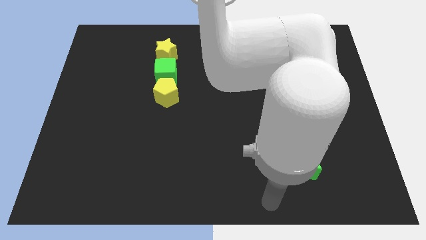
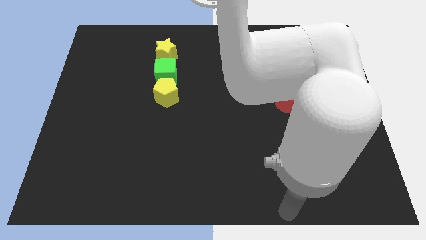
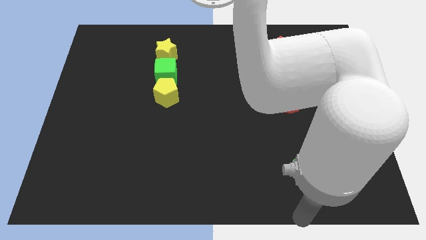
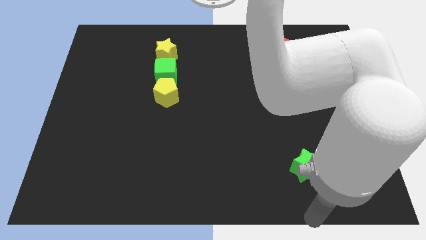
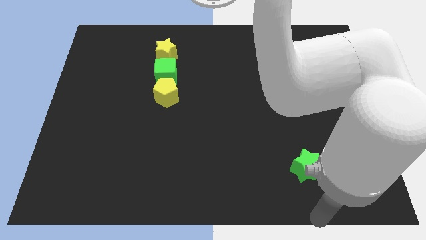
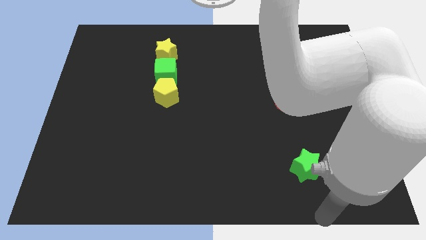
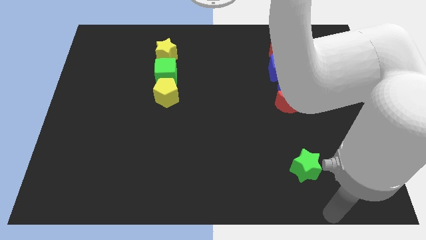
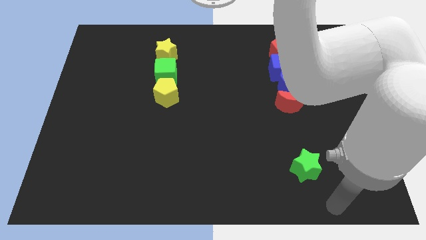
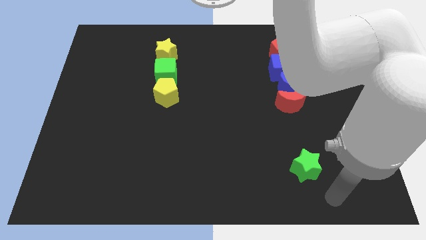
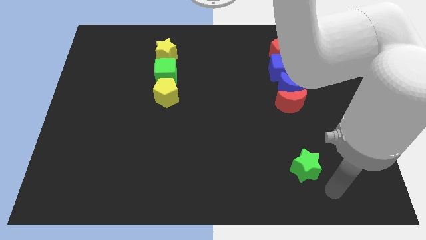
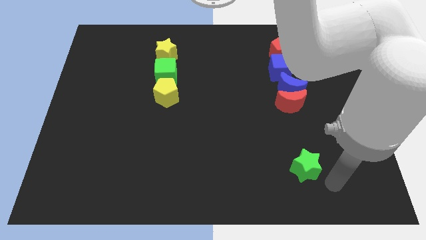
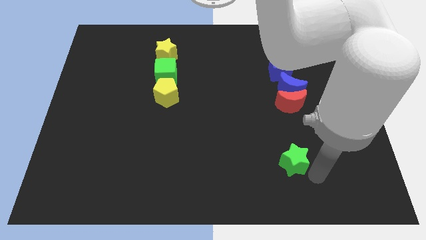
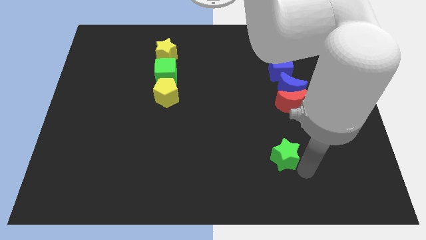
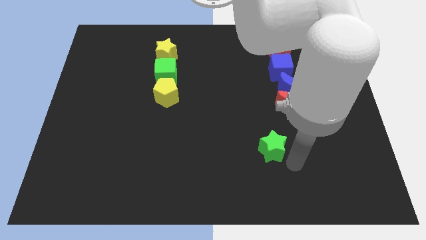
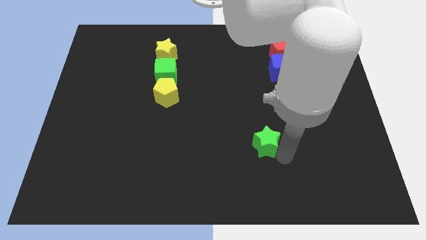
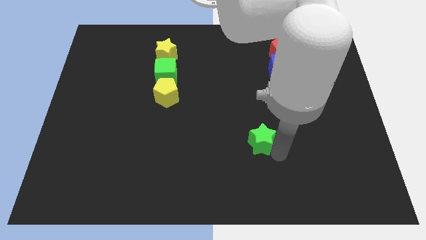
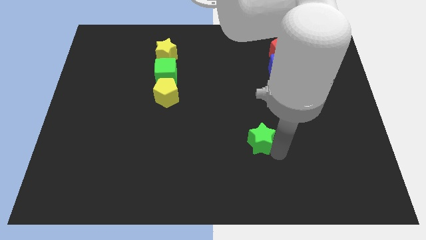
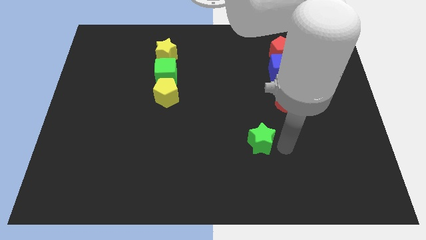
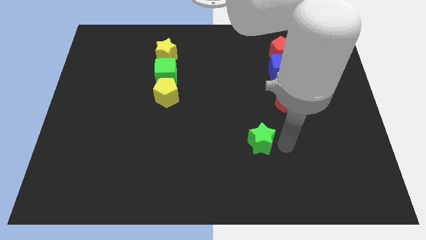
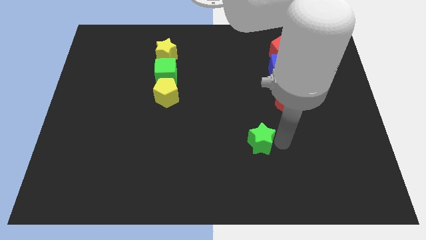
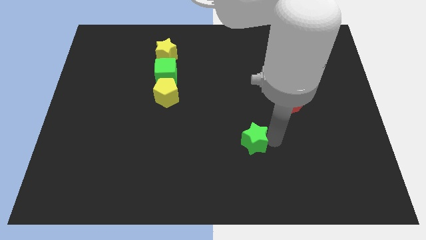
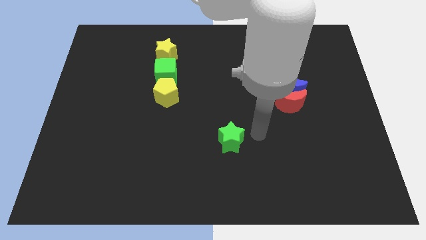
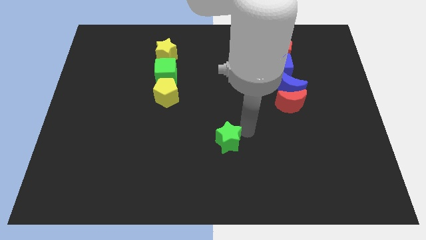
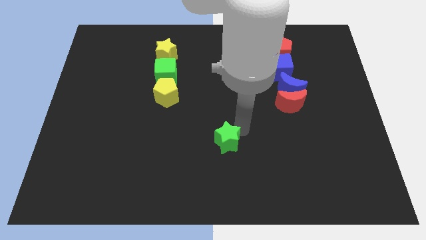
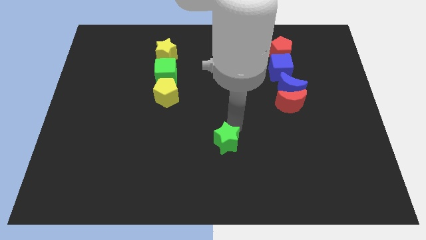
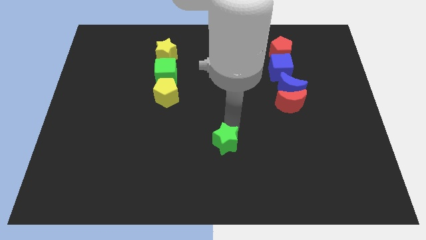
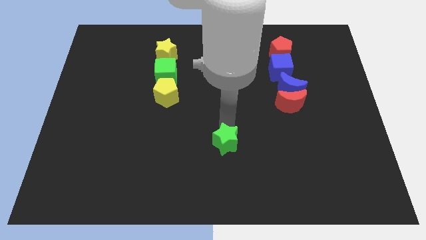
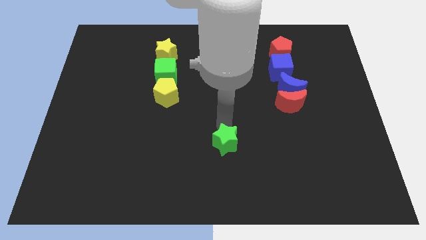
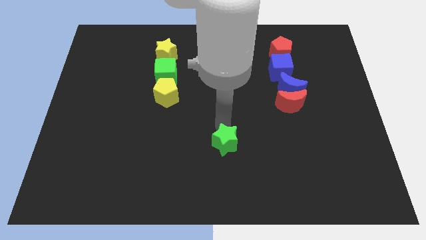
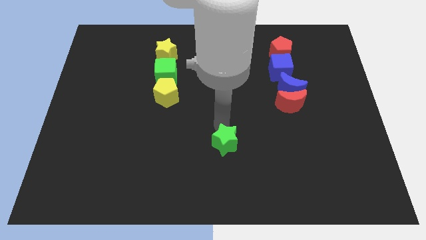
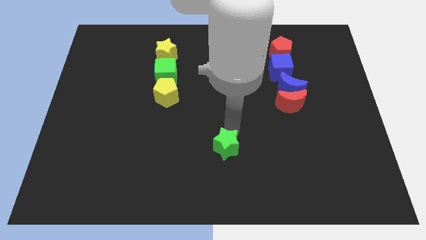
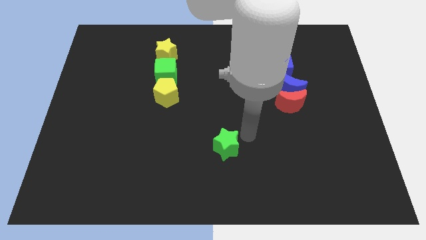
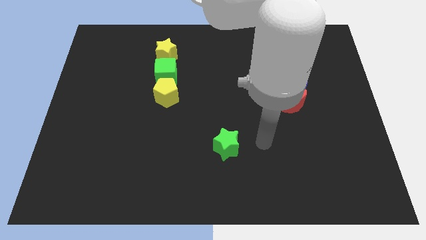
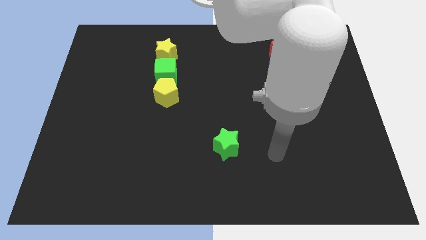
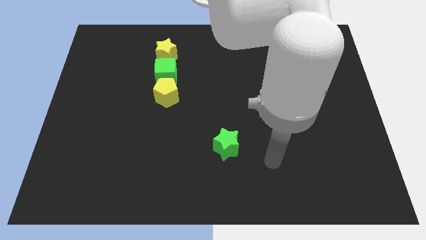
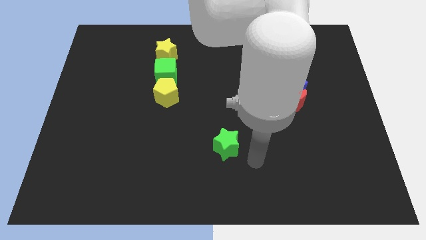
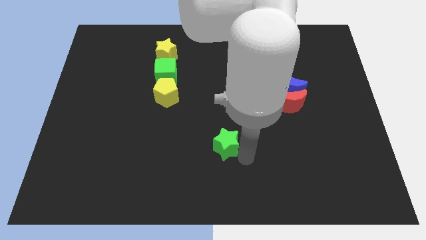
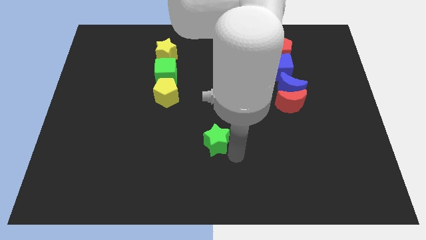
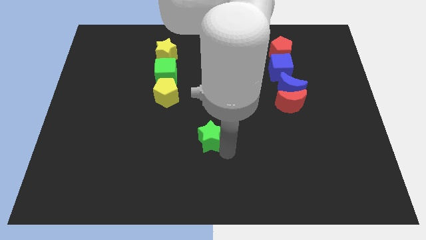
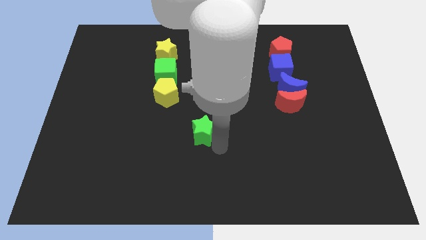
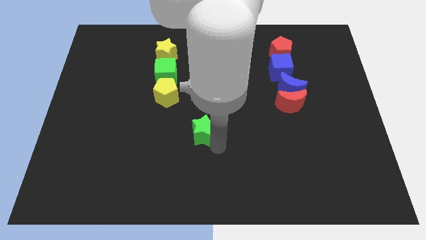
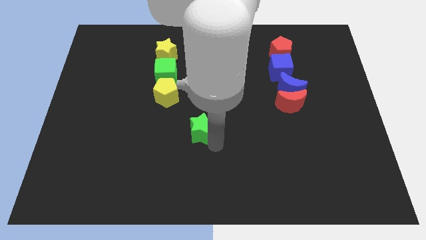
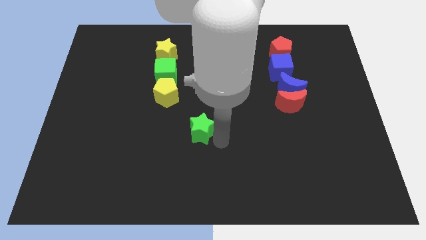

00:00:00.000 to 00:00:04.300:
push the green star diagonally bottom left to the red crescent

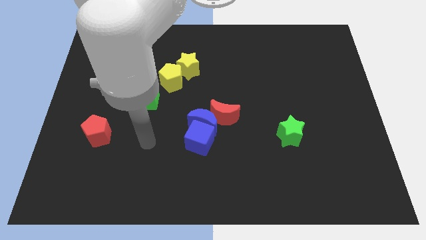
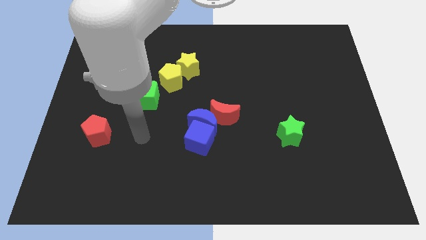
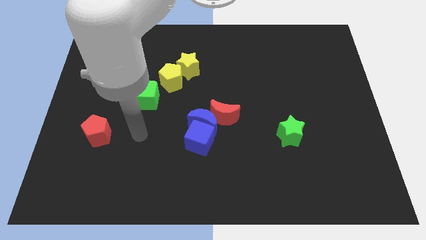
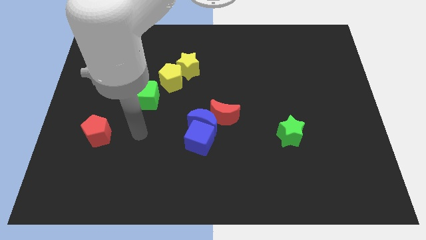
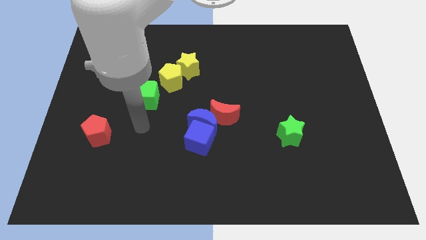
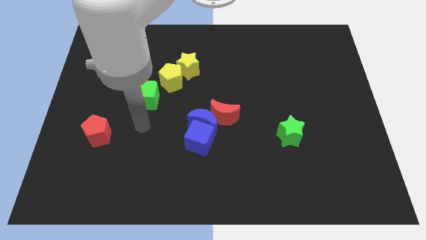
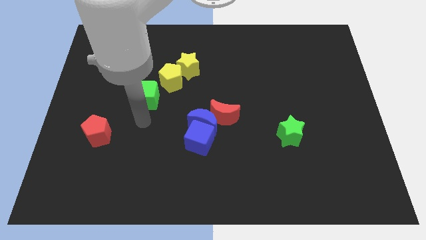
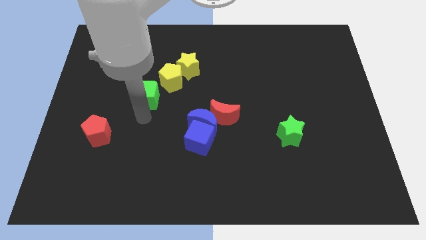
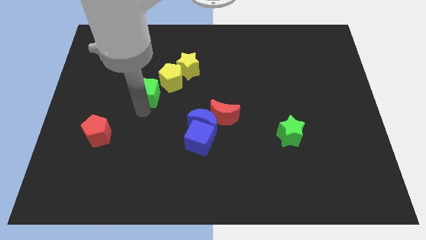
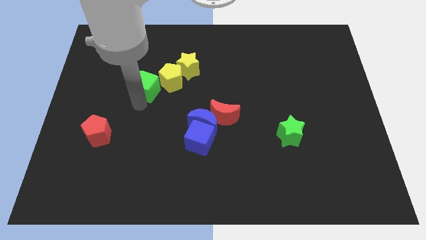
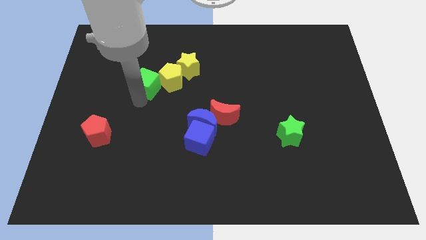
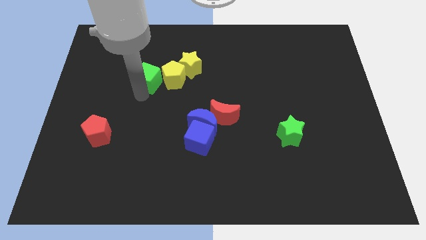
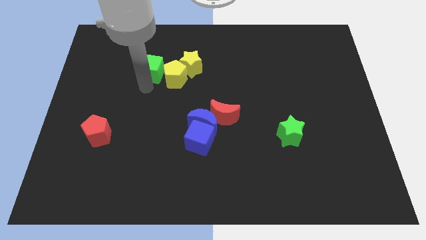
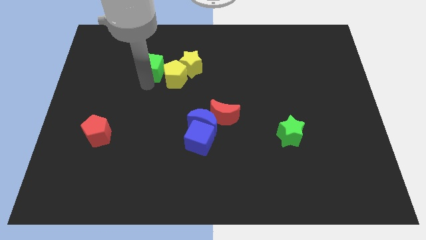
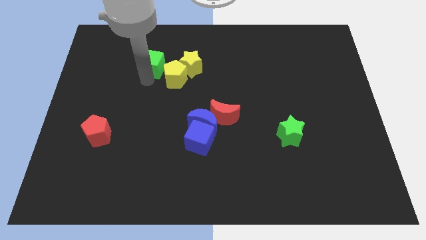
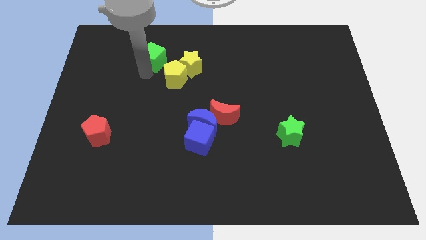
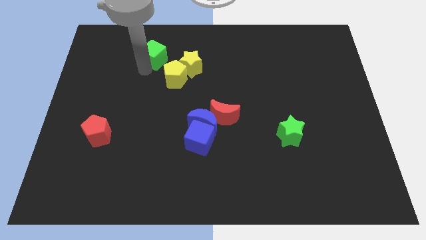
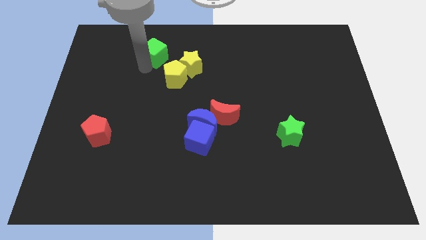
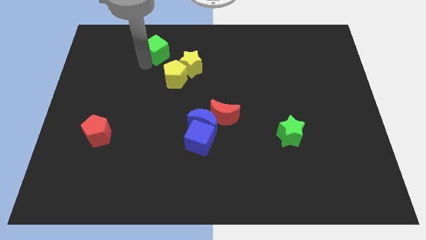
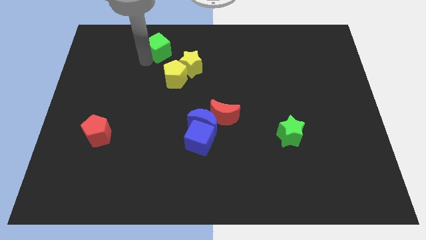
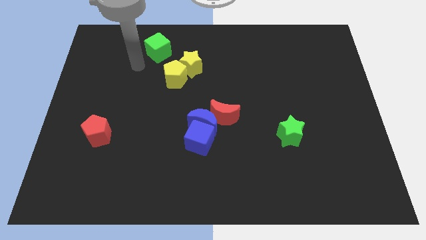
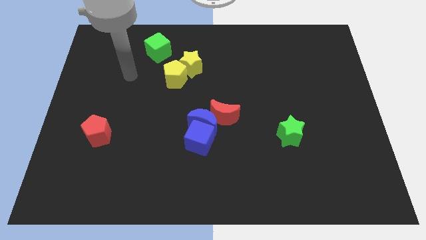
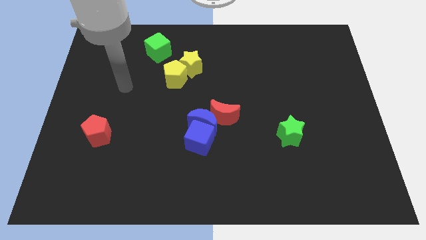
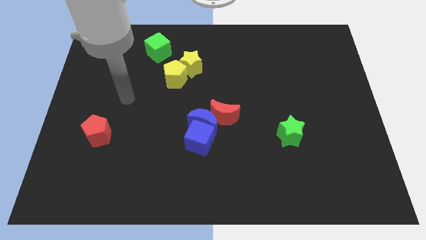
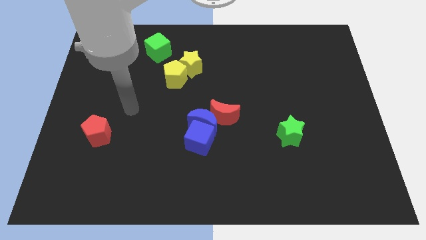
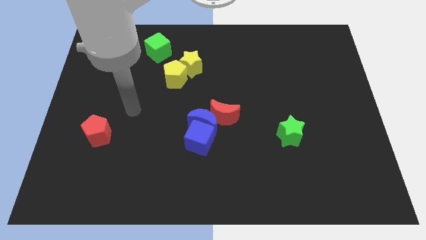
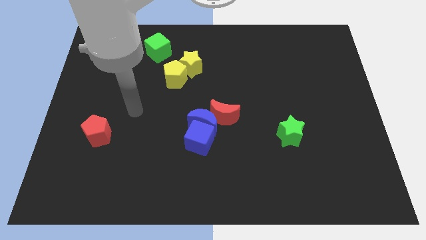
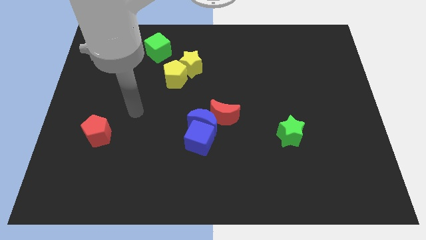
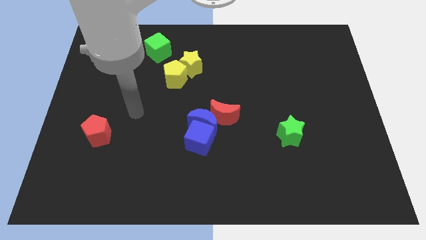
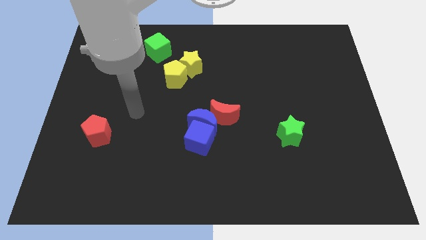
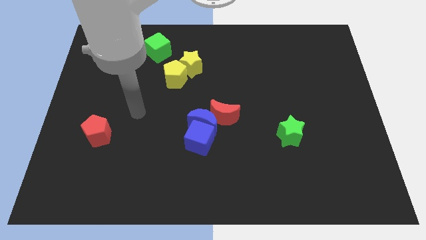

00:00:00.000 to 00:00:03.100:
place the green cube at the top left side of the yellow blocks

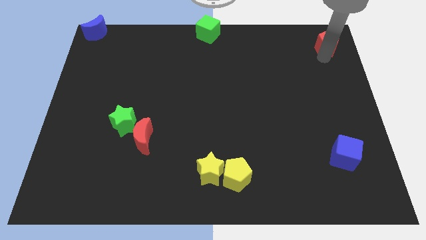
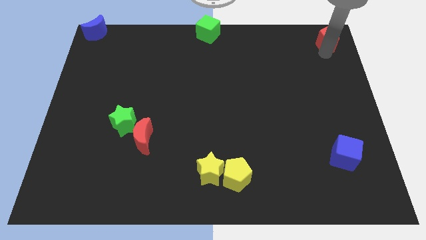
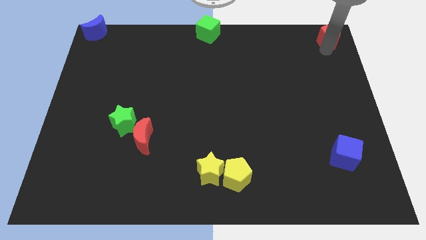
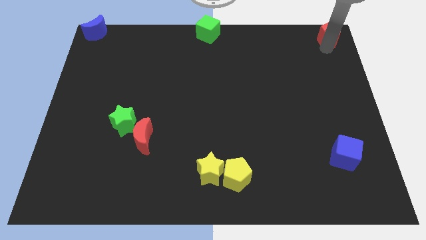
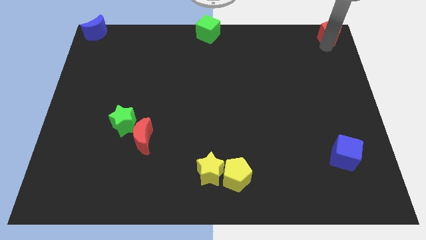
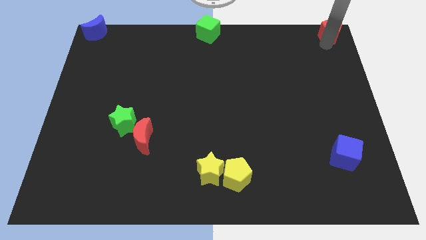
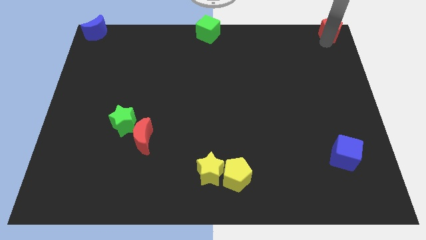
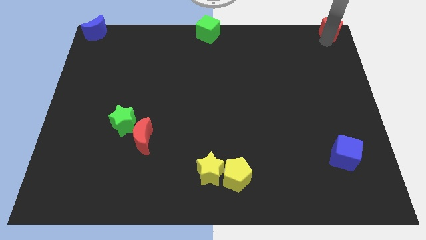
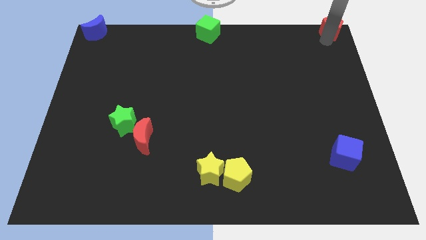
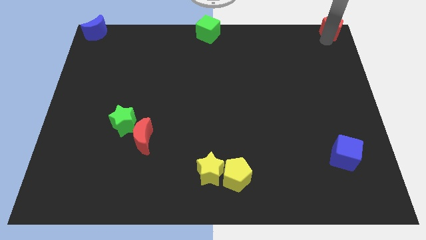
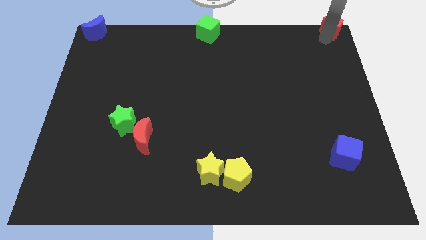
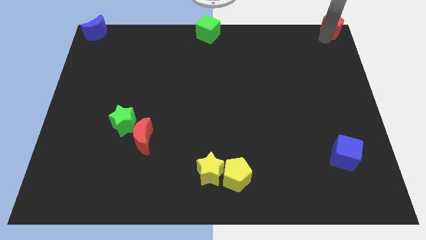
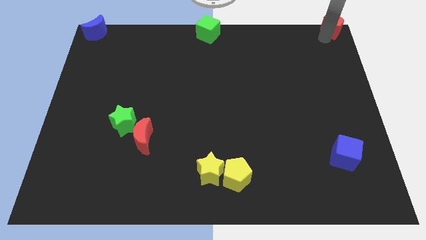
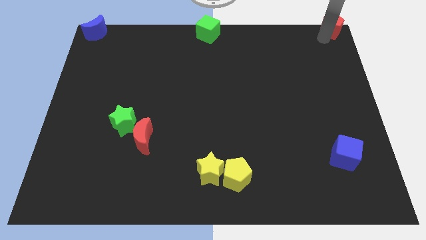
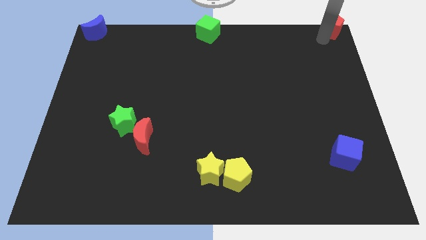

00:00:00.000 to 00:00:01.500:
move the red pentagon to the top right corner

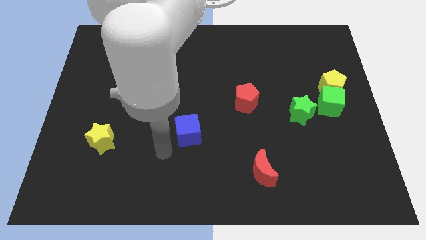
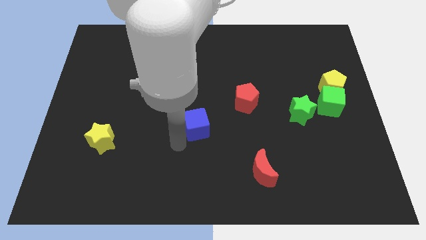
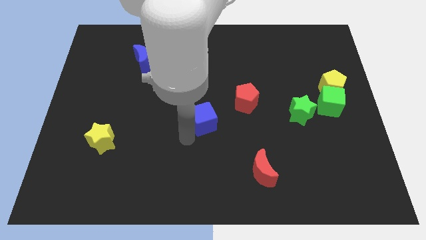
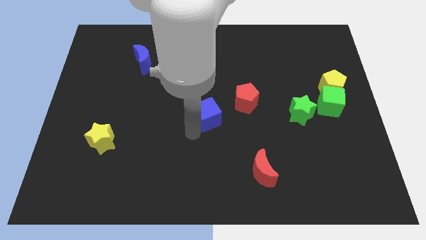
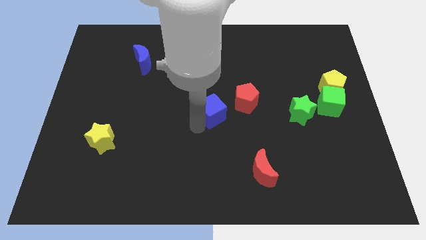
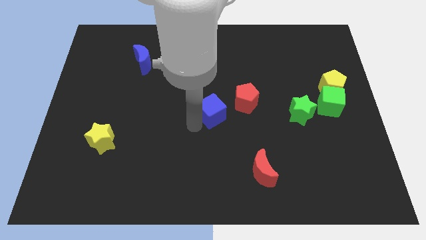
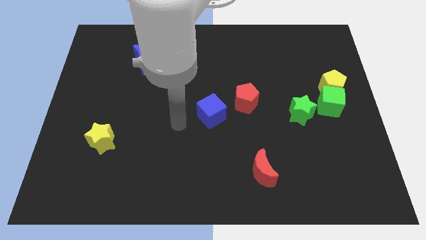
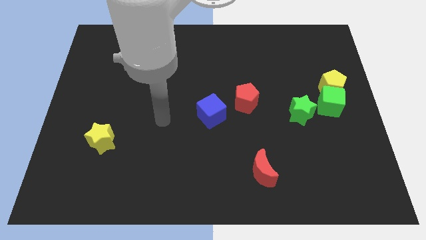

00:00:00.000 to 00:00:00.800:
push the blue cube to the left of the red pentagon
